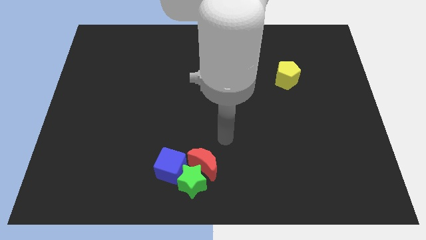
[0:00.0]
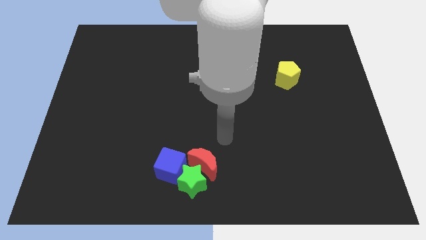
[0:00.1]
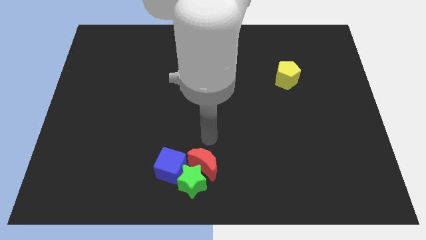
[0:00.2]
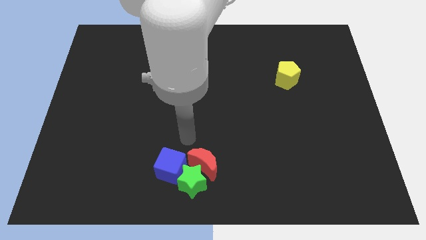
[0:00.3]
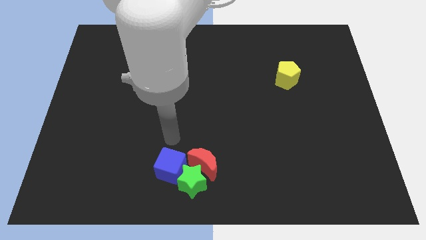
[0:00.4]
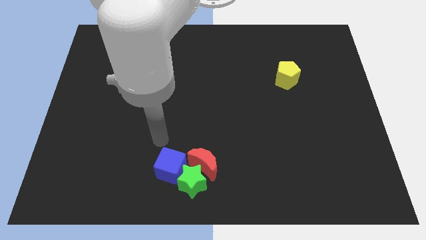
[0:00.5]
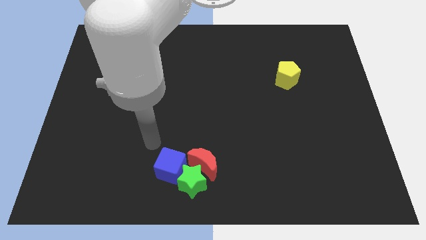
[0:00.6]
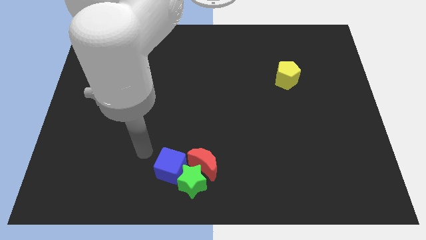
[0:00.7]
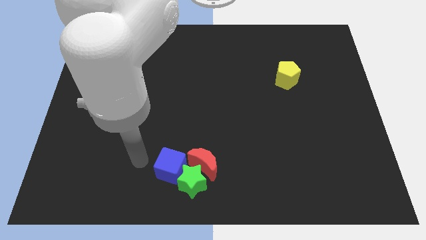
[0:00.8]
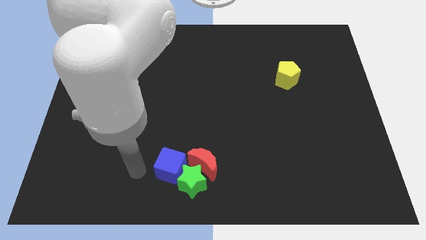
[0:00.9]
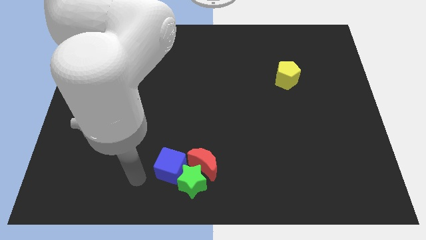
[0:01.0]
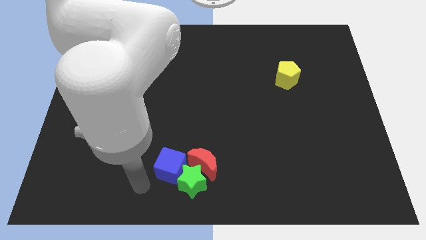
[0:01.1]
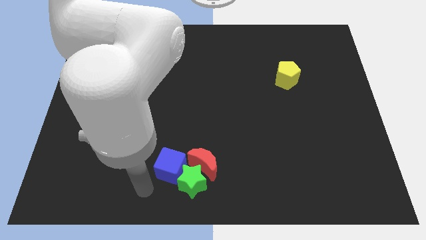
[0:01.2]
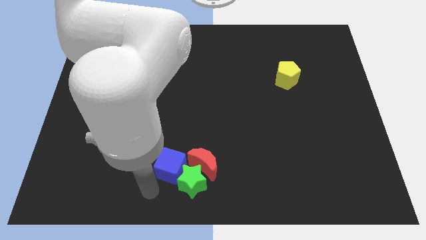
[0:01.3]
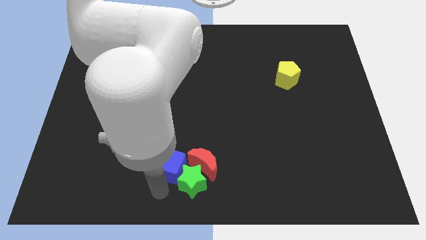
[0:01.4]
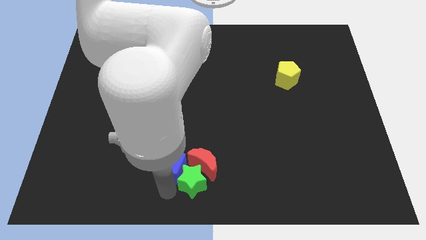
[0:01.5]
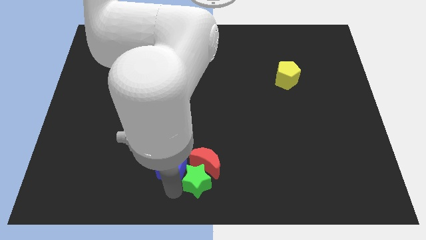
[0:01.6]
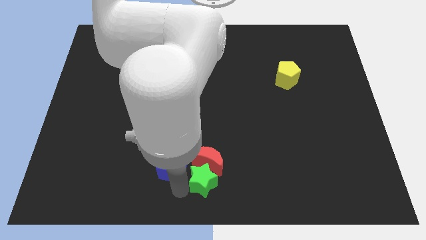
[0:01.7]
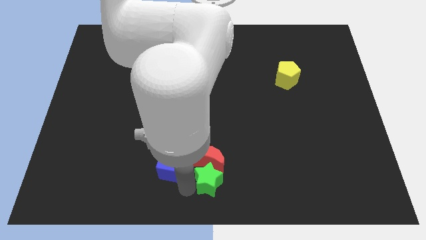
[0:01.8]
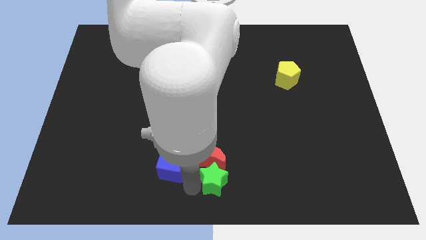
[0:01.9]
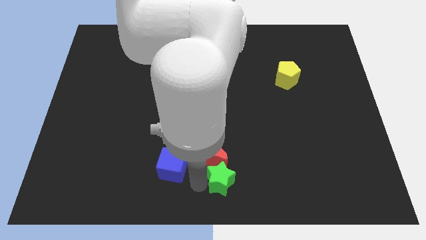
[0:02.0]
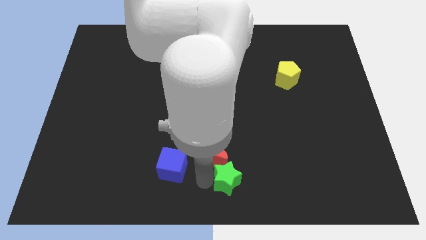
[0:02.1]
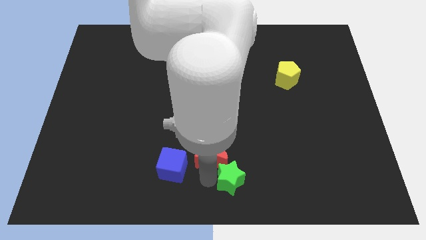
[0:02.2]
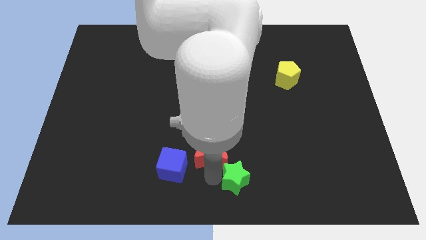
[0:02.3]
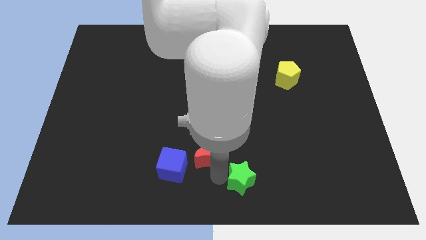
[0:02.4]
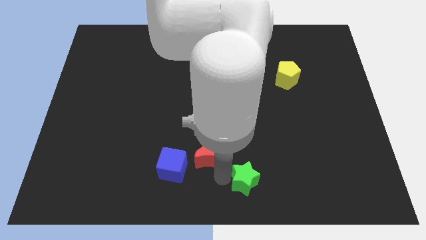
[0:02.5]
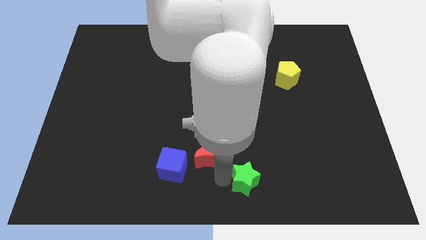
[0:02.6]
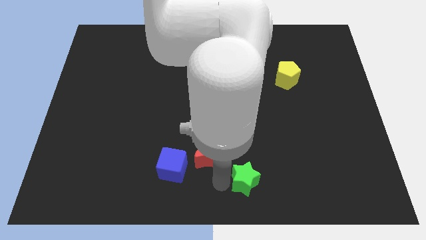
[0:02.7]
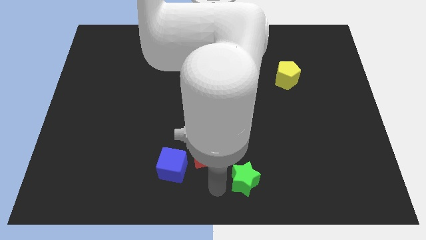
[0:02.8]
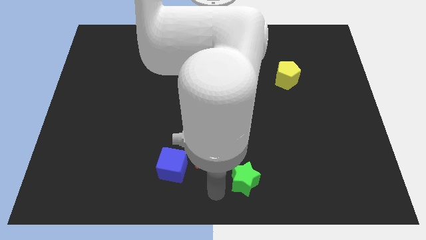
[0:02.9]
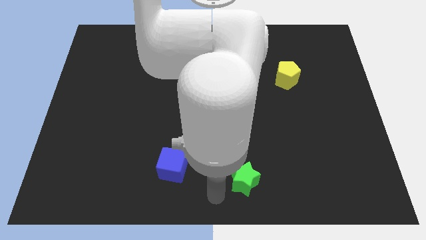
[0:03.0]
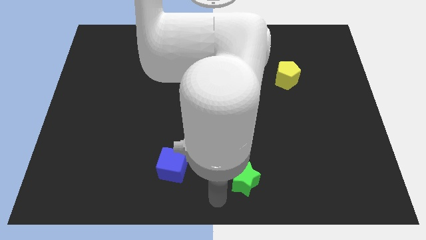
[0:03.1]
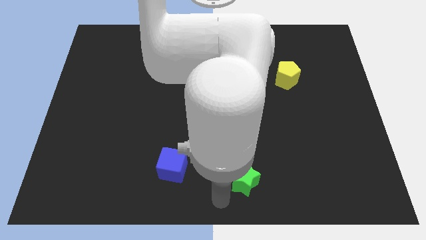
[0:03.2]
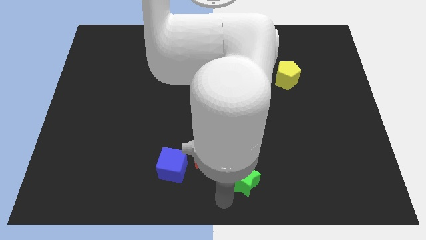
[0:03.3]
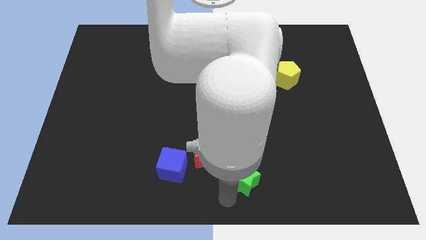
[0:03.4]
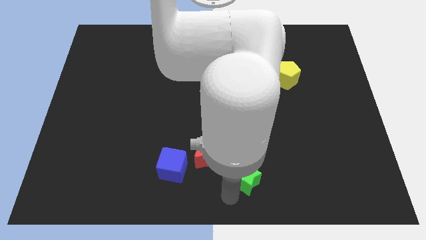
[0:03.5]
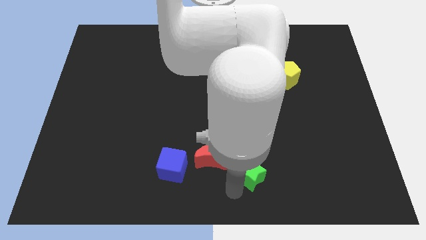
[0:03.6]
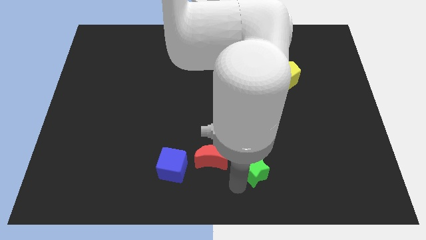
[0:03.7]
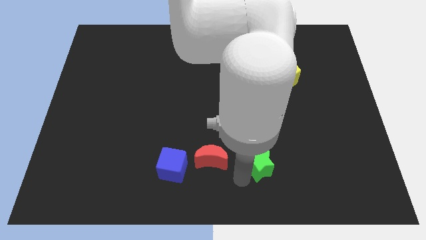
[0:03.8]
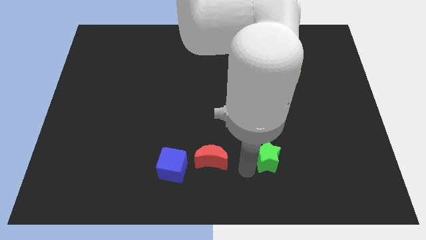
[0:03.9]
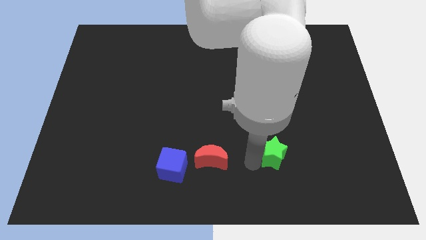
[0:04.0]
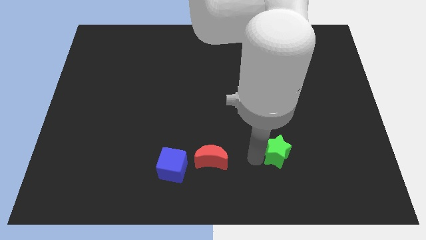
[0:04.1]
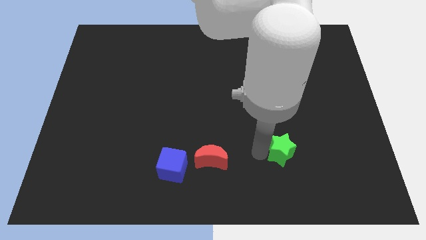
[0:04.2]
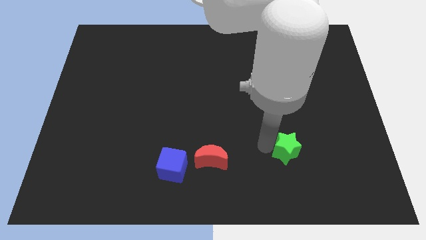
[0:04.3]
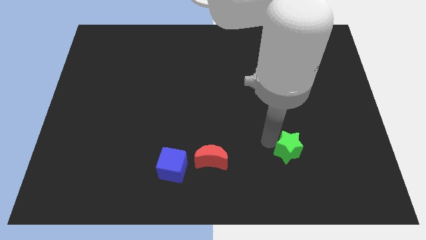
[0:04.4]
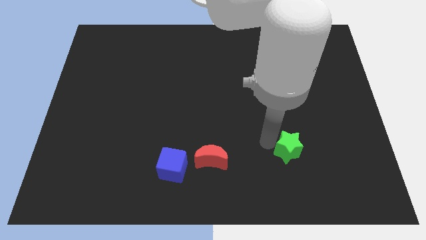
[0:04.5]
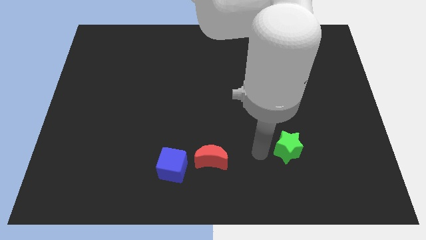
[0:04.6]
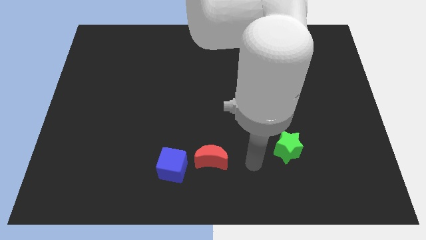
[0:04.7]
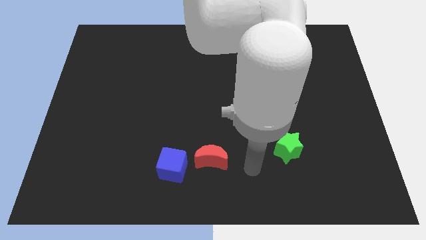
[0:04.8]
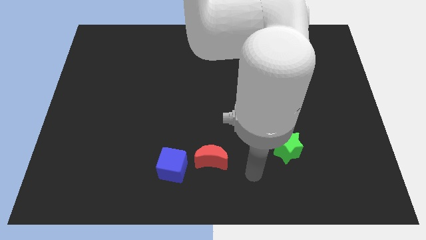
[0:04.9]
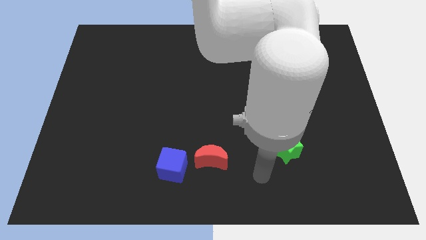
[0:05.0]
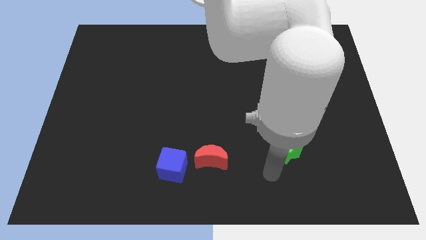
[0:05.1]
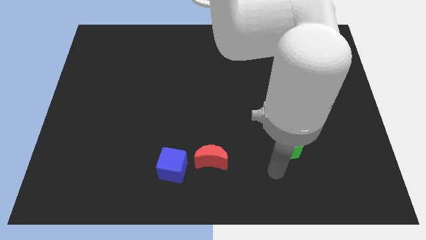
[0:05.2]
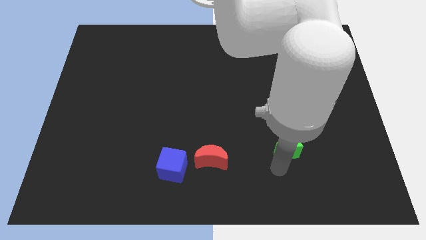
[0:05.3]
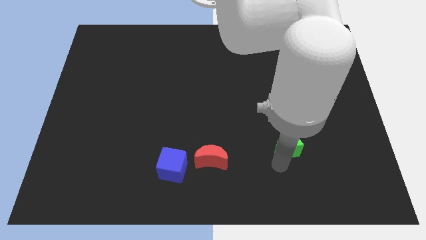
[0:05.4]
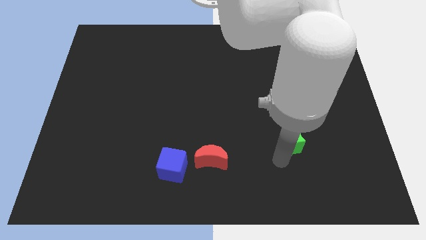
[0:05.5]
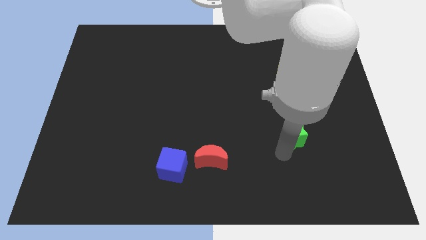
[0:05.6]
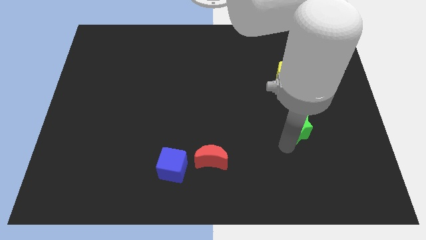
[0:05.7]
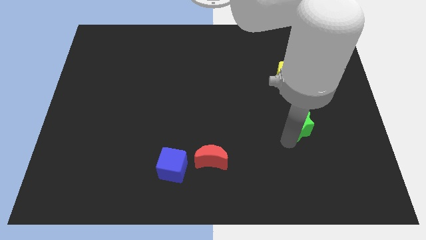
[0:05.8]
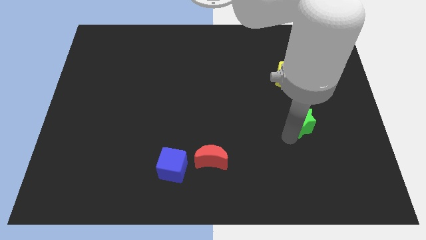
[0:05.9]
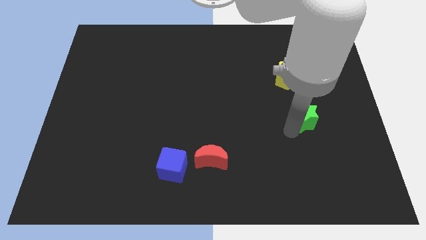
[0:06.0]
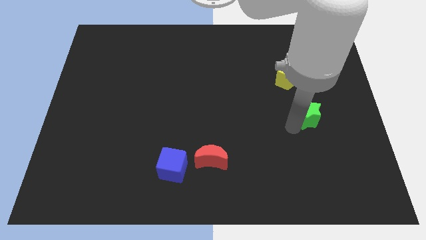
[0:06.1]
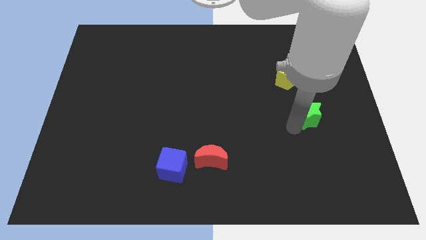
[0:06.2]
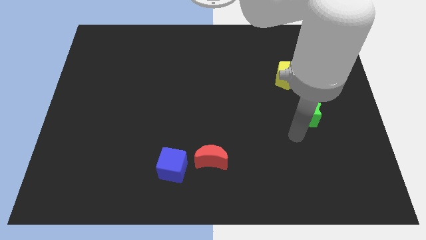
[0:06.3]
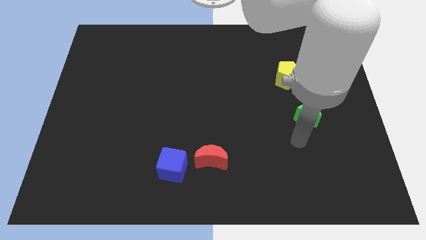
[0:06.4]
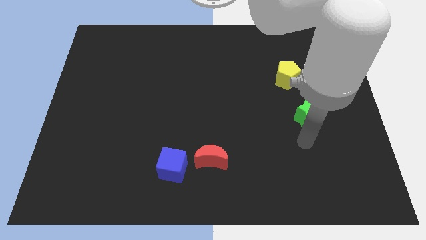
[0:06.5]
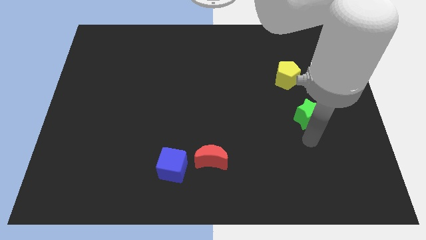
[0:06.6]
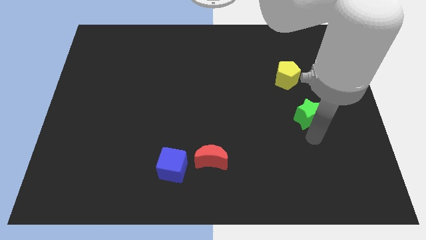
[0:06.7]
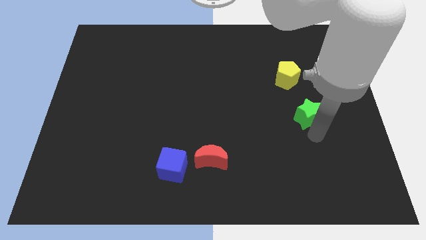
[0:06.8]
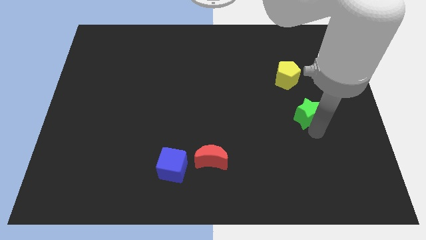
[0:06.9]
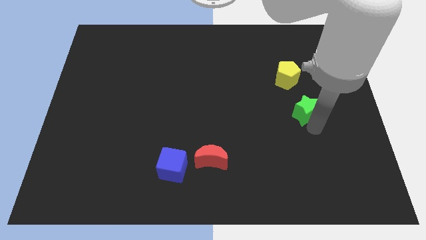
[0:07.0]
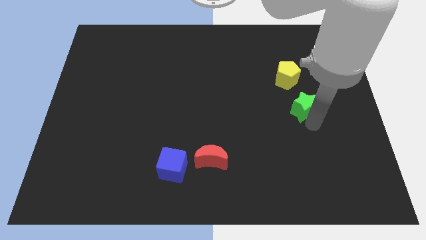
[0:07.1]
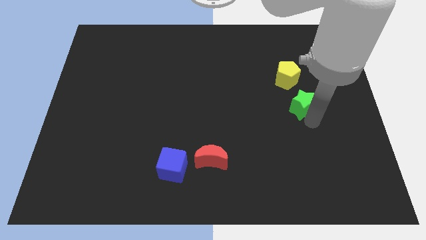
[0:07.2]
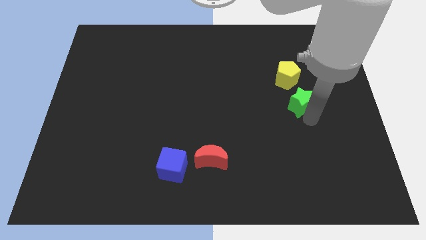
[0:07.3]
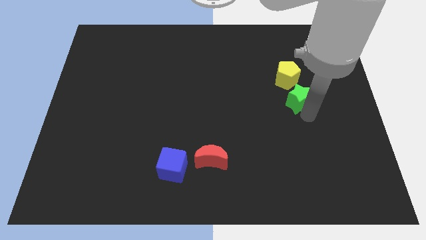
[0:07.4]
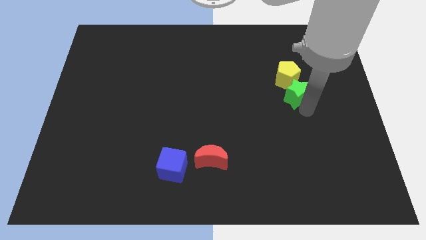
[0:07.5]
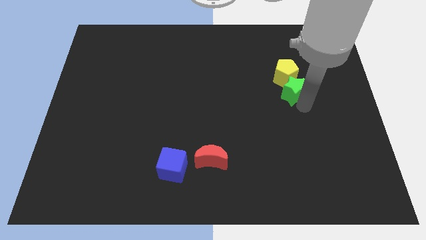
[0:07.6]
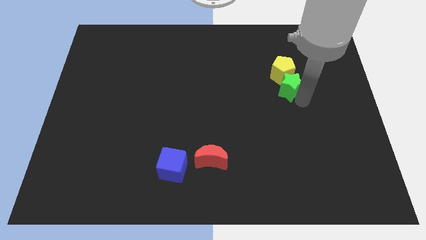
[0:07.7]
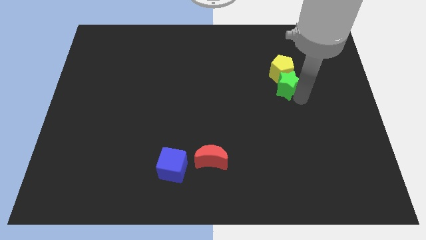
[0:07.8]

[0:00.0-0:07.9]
move the star next to the yellow block

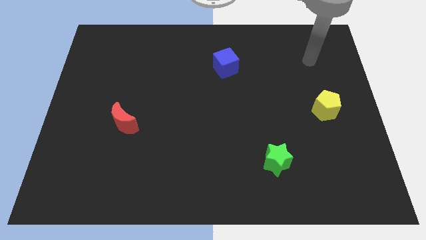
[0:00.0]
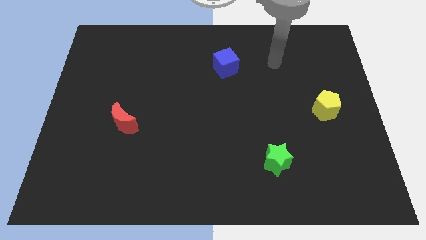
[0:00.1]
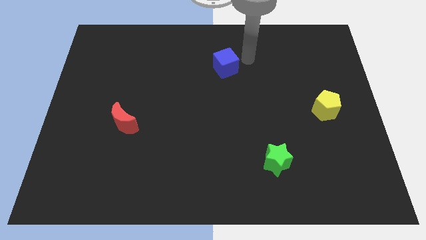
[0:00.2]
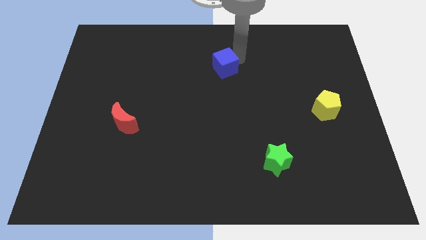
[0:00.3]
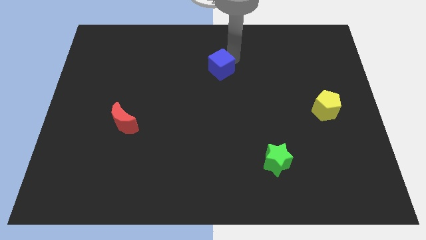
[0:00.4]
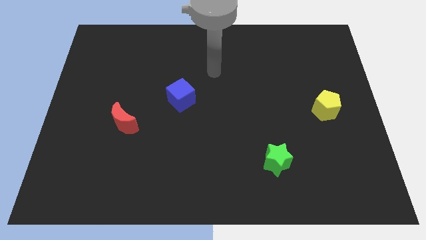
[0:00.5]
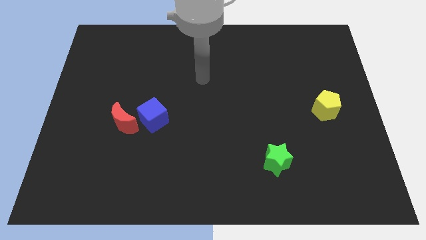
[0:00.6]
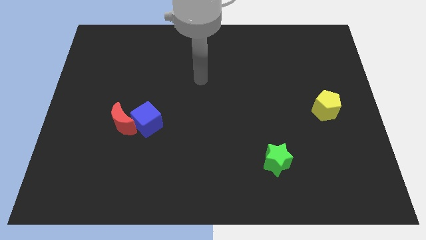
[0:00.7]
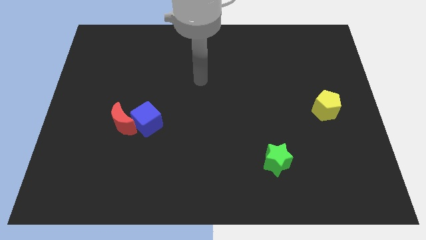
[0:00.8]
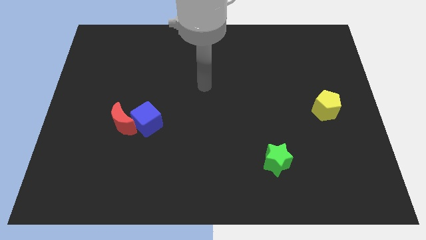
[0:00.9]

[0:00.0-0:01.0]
push the cube towards the red moon
